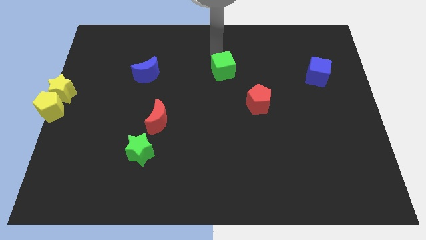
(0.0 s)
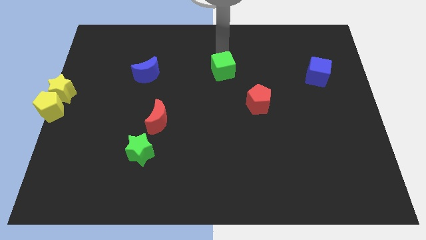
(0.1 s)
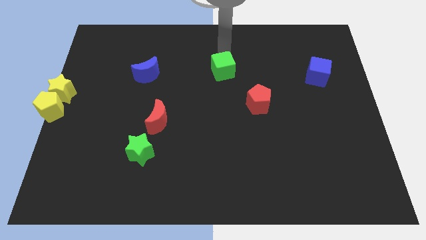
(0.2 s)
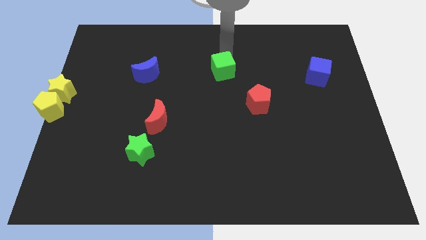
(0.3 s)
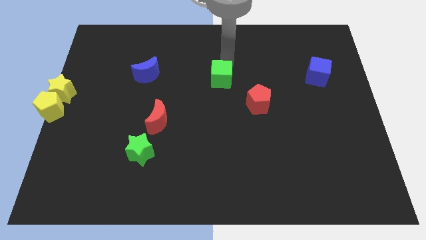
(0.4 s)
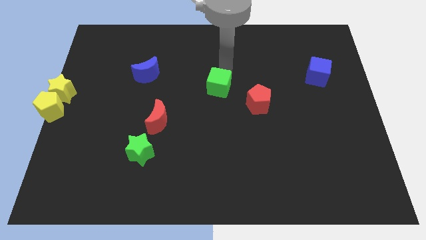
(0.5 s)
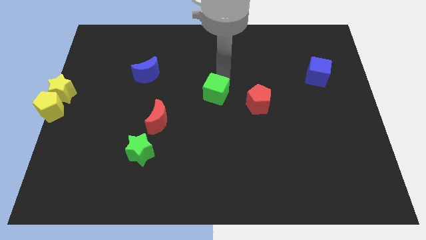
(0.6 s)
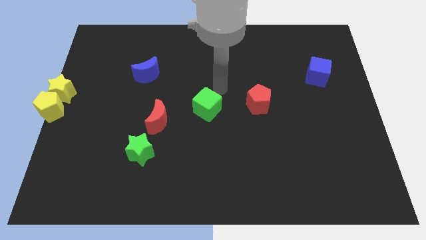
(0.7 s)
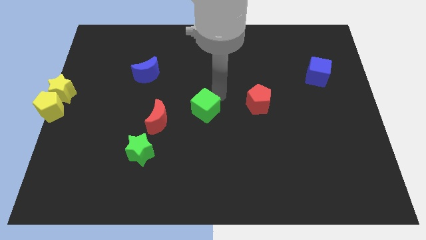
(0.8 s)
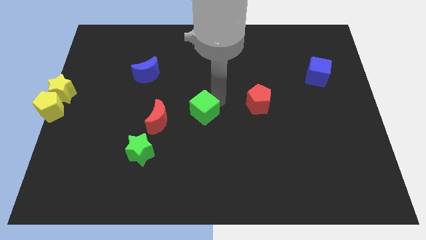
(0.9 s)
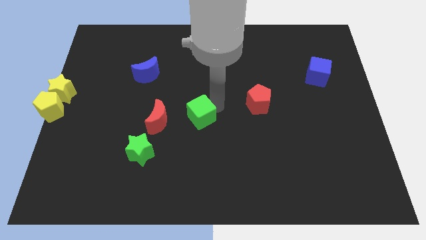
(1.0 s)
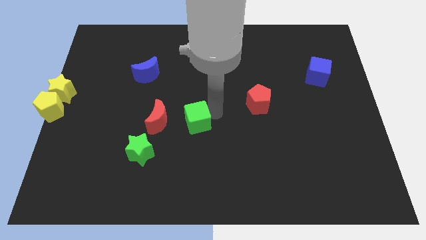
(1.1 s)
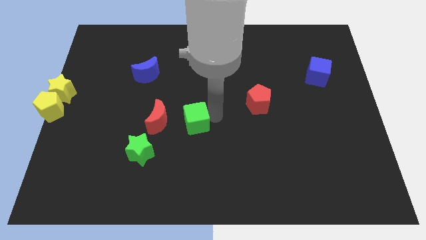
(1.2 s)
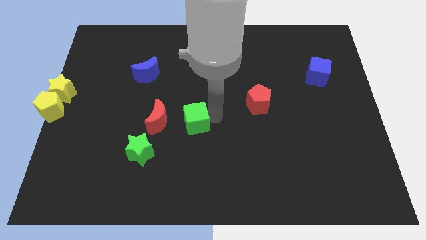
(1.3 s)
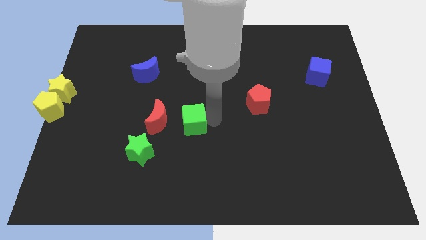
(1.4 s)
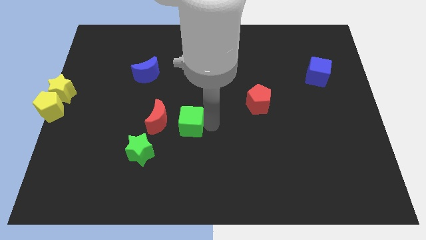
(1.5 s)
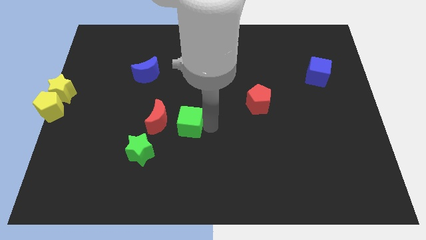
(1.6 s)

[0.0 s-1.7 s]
push the green cube to the right of the red crescent

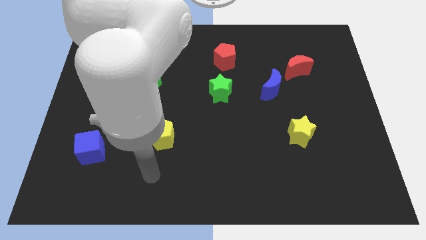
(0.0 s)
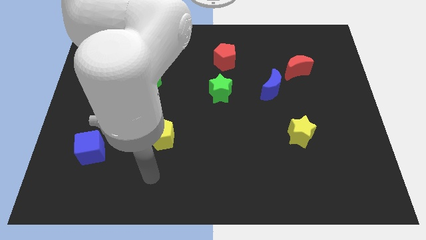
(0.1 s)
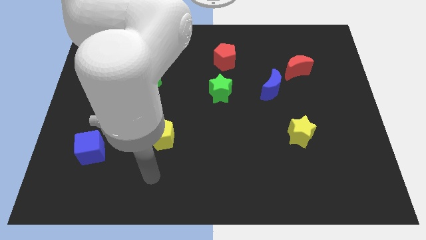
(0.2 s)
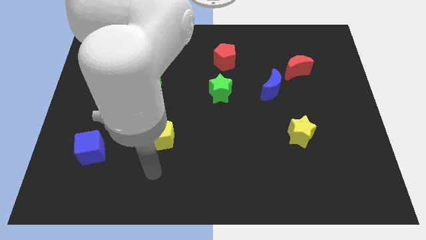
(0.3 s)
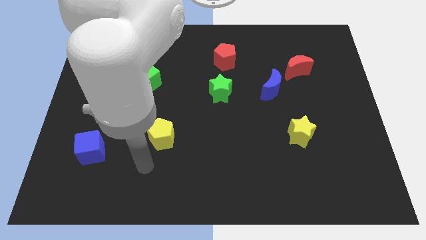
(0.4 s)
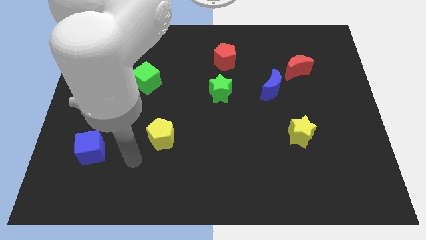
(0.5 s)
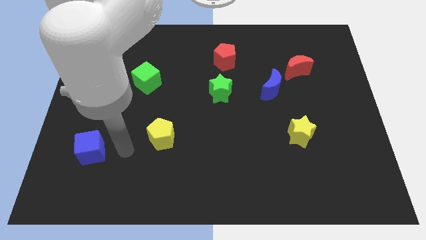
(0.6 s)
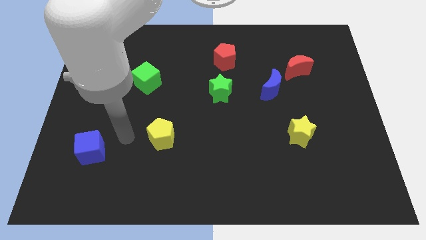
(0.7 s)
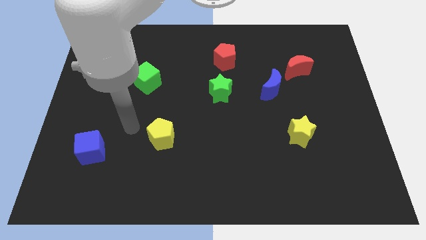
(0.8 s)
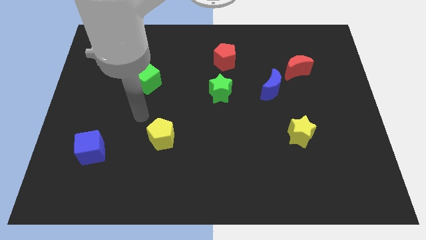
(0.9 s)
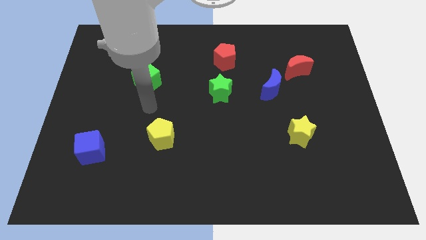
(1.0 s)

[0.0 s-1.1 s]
move your arm above to the yellow pentagon

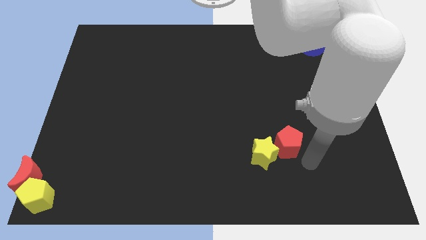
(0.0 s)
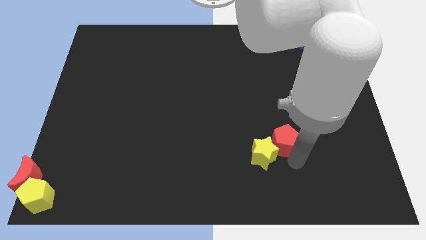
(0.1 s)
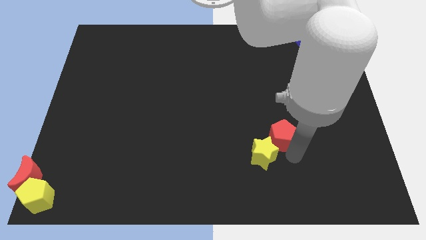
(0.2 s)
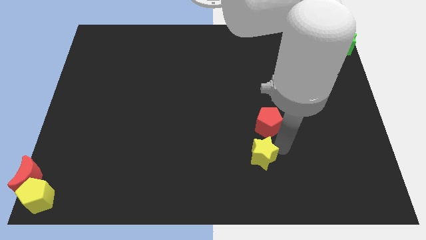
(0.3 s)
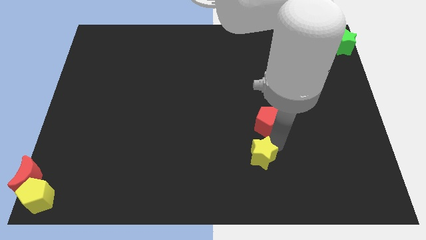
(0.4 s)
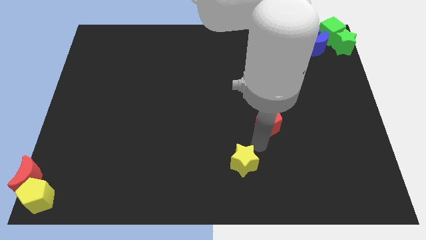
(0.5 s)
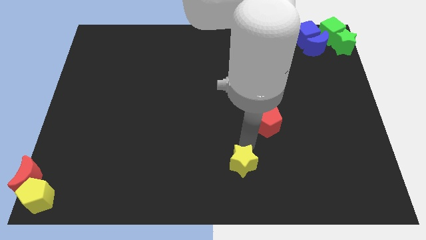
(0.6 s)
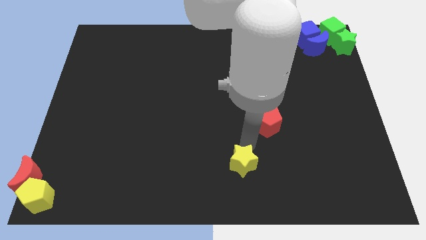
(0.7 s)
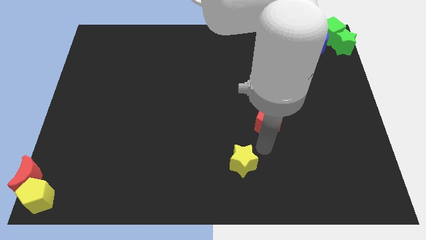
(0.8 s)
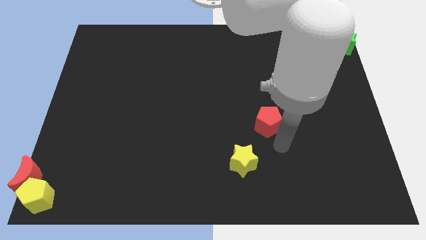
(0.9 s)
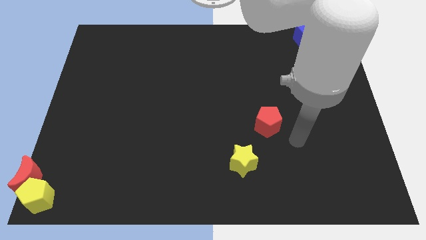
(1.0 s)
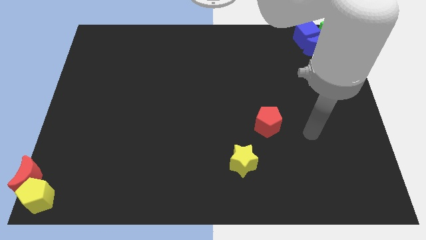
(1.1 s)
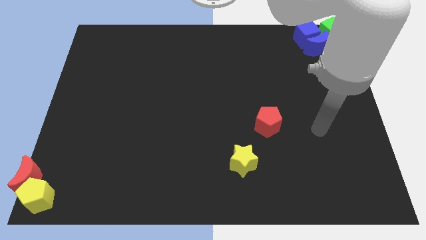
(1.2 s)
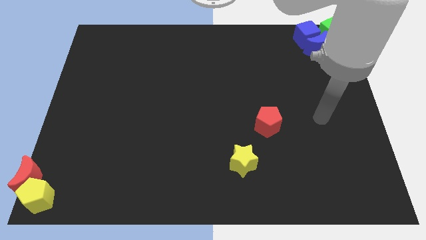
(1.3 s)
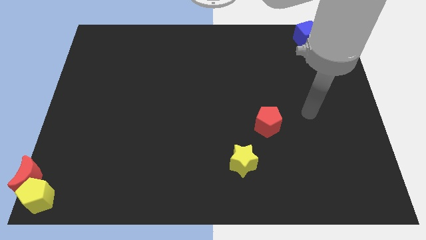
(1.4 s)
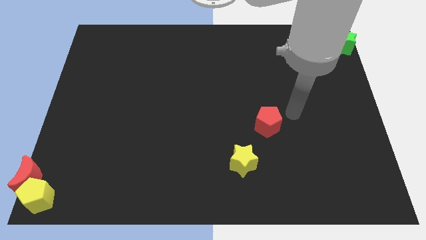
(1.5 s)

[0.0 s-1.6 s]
separate the yellow star and red pentagon from each other

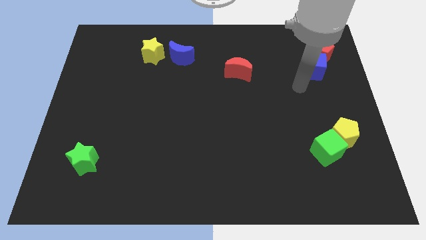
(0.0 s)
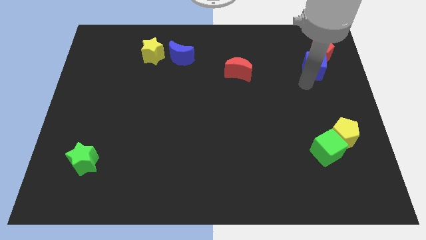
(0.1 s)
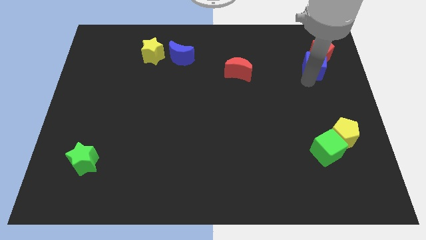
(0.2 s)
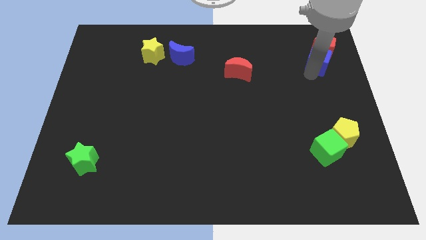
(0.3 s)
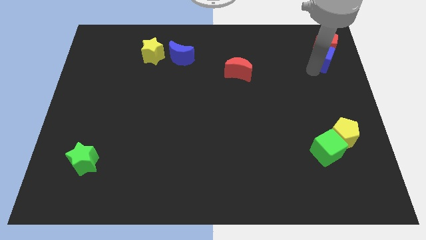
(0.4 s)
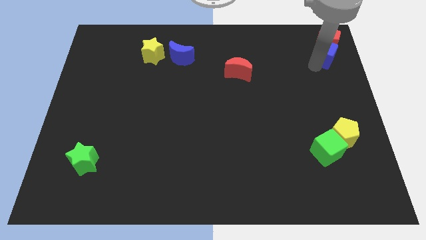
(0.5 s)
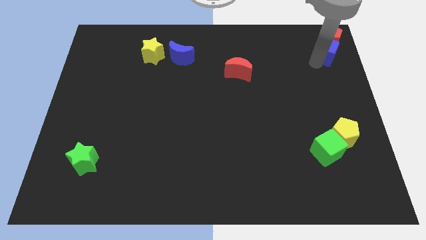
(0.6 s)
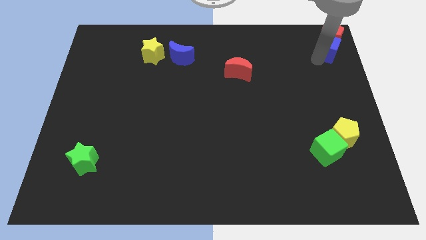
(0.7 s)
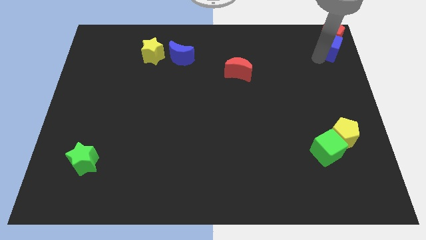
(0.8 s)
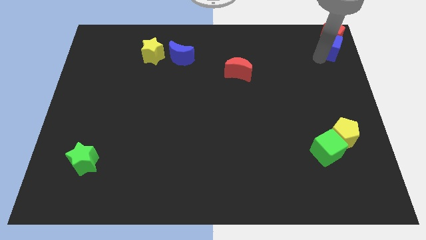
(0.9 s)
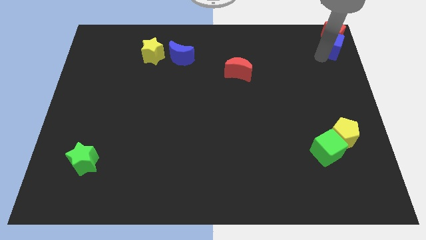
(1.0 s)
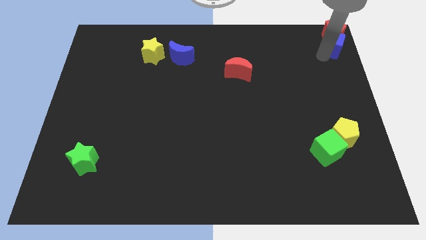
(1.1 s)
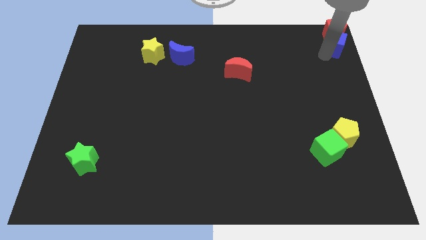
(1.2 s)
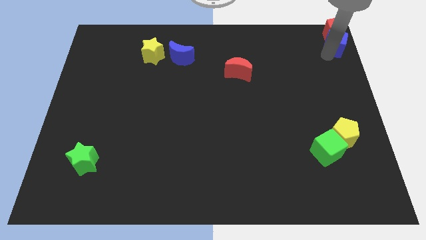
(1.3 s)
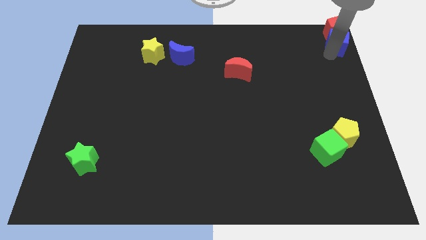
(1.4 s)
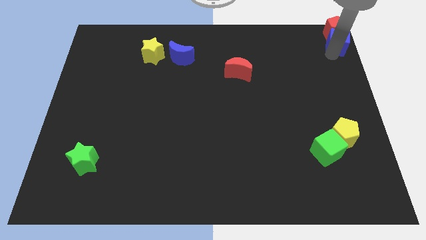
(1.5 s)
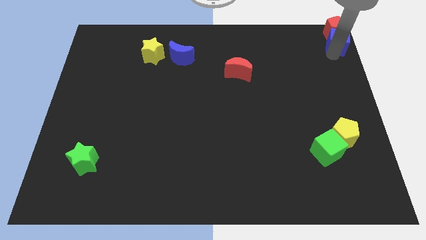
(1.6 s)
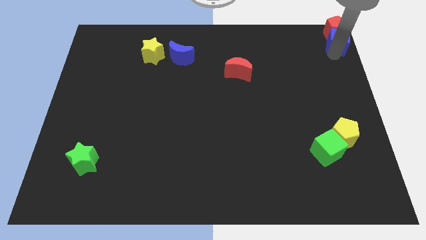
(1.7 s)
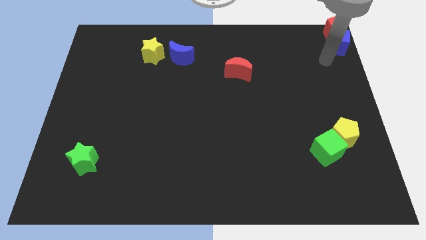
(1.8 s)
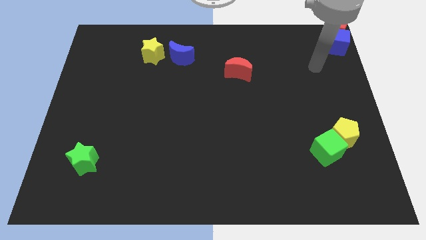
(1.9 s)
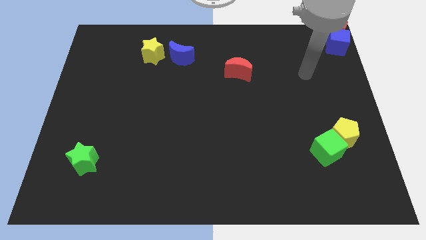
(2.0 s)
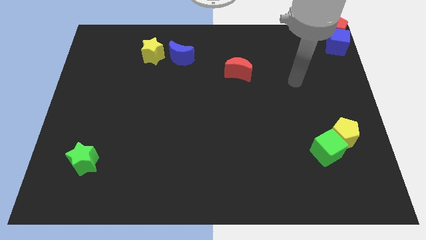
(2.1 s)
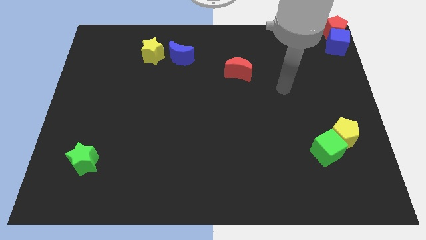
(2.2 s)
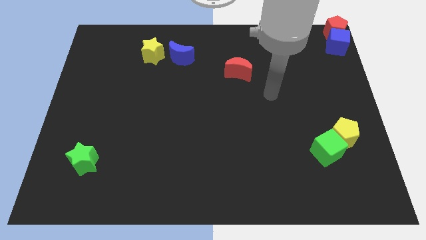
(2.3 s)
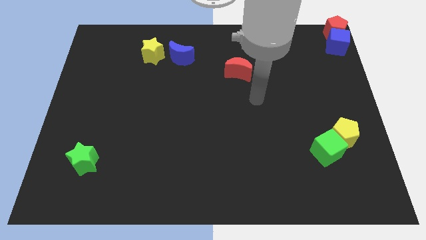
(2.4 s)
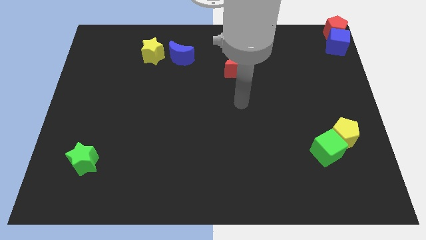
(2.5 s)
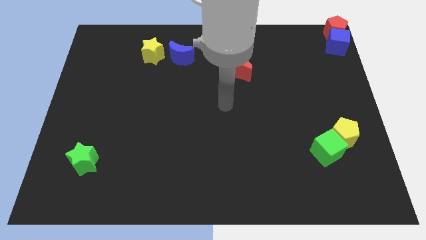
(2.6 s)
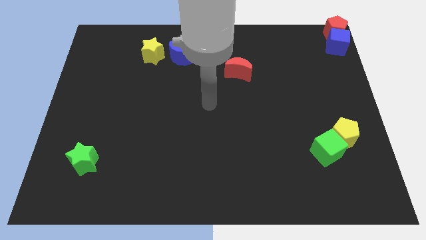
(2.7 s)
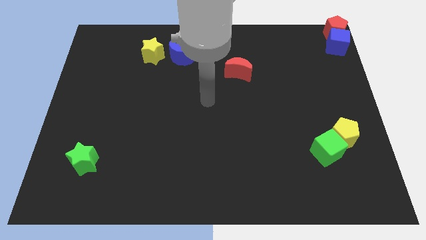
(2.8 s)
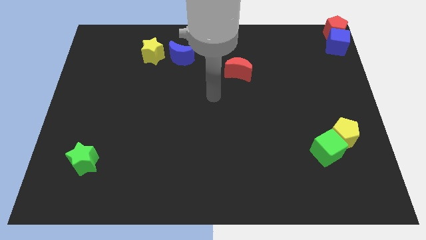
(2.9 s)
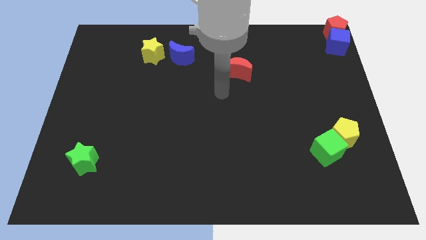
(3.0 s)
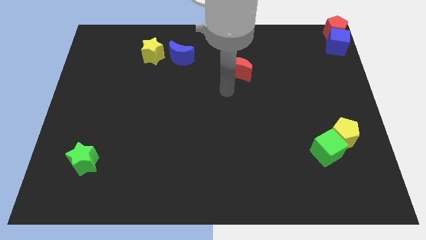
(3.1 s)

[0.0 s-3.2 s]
move the blue cube and the red pentagon to the top right corner

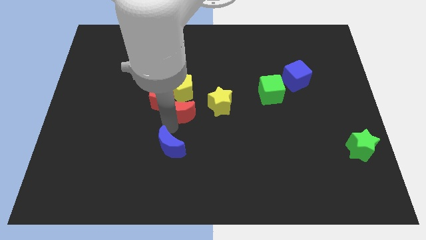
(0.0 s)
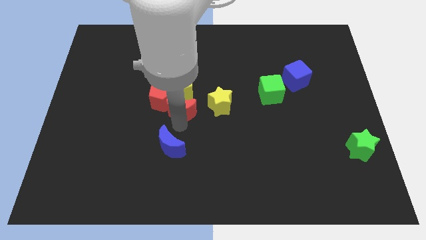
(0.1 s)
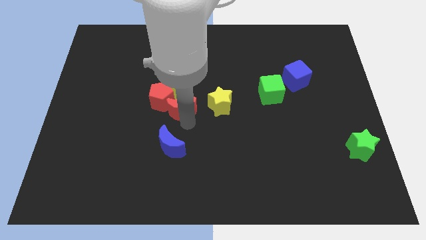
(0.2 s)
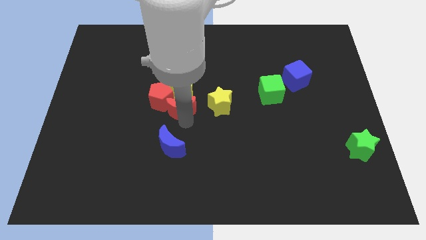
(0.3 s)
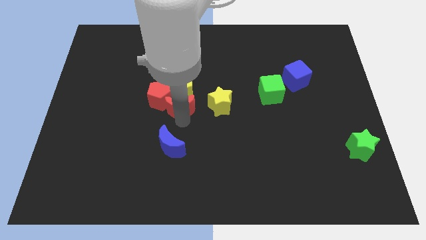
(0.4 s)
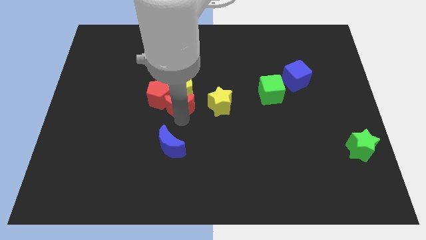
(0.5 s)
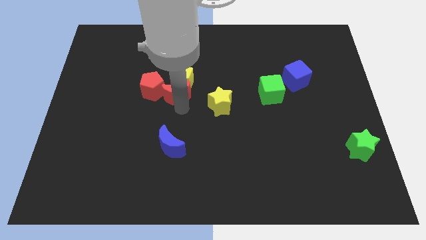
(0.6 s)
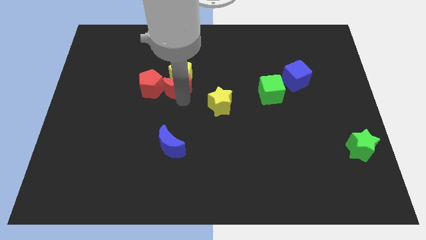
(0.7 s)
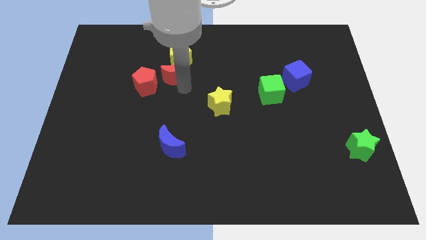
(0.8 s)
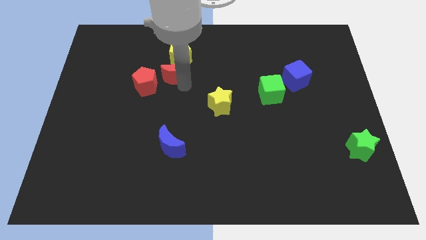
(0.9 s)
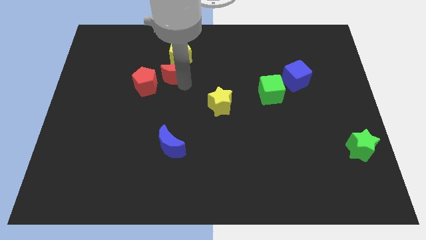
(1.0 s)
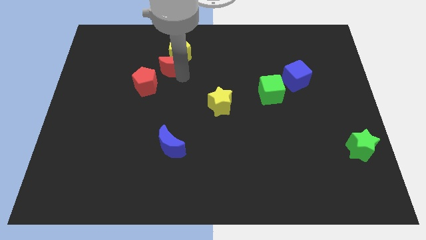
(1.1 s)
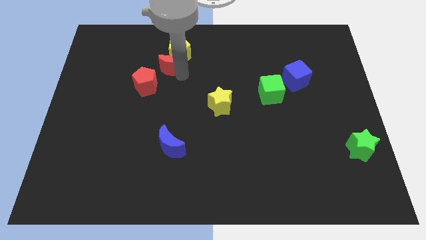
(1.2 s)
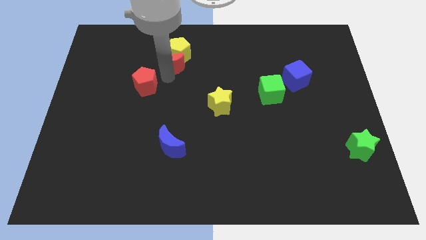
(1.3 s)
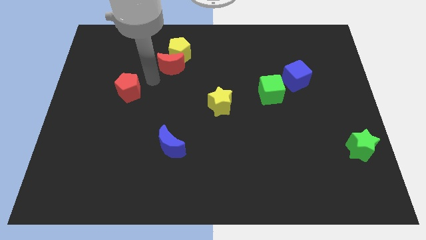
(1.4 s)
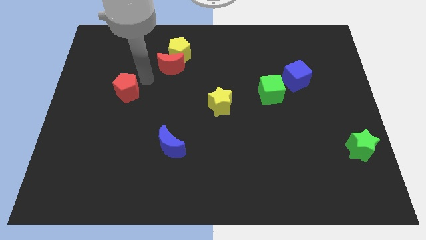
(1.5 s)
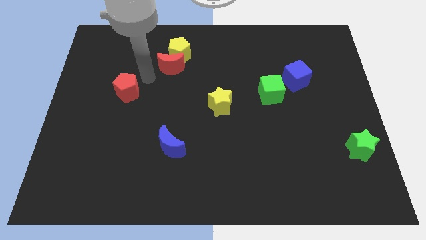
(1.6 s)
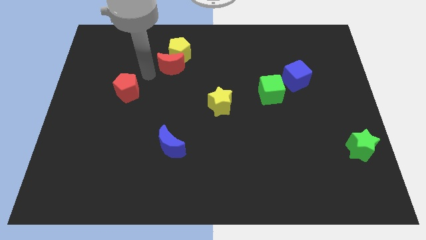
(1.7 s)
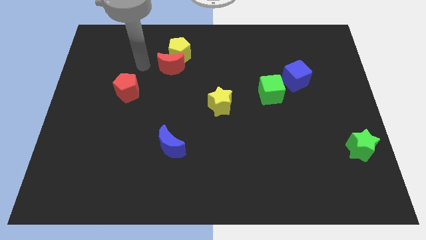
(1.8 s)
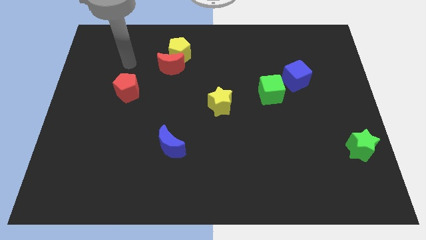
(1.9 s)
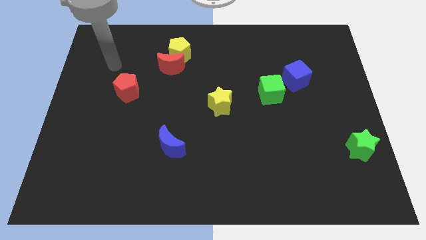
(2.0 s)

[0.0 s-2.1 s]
separate the red pentagon from the red moon
